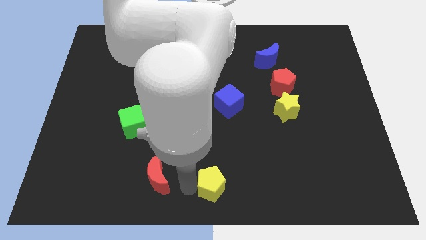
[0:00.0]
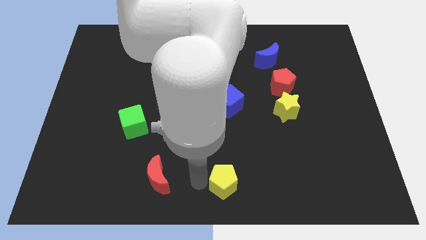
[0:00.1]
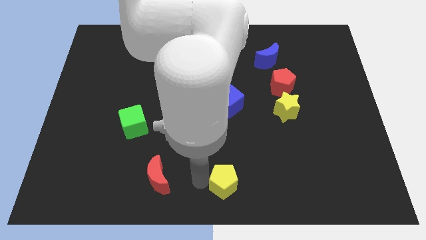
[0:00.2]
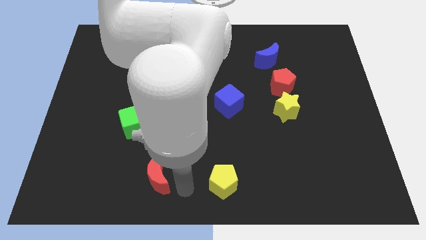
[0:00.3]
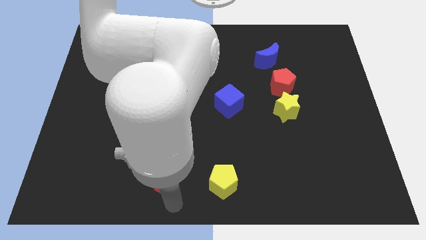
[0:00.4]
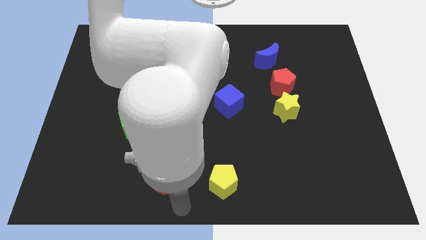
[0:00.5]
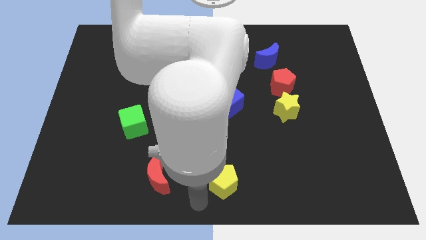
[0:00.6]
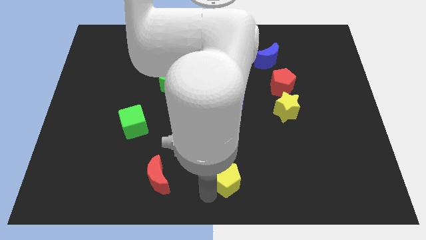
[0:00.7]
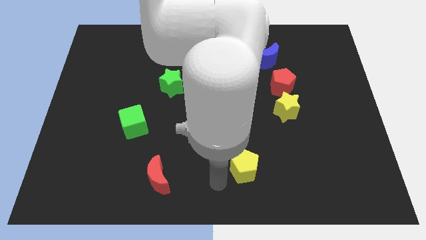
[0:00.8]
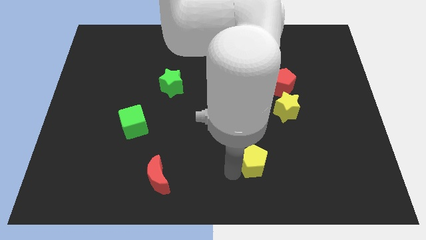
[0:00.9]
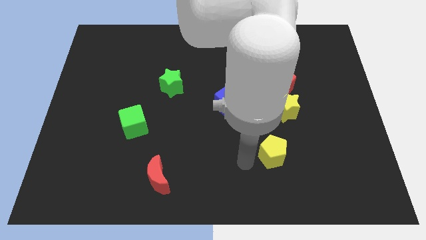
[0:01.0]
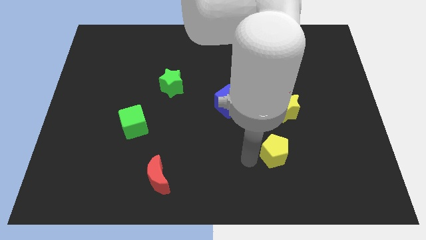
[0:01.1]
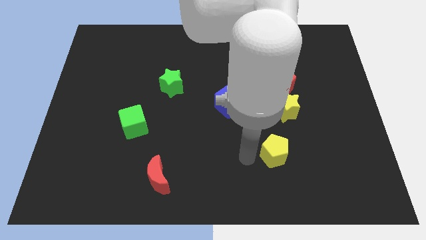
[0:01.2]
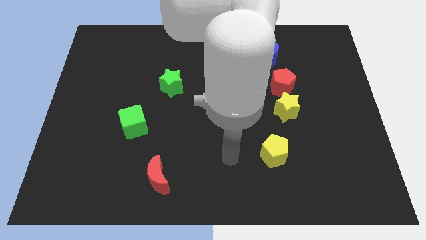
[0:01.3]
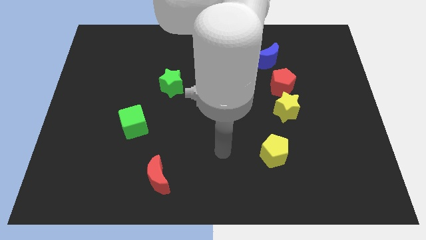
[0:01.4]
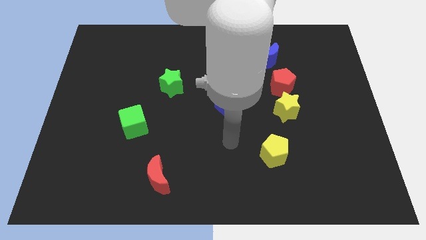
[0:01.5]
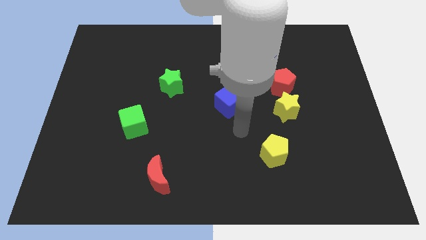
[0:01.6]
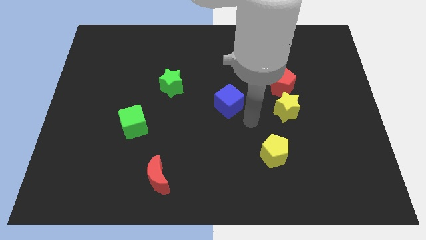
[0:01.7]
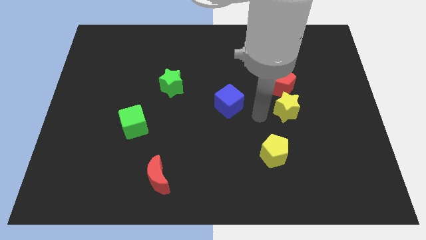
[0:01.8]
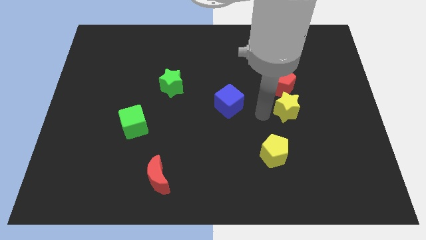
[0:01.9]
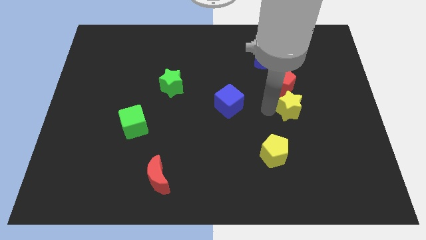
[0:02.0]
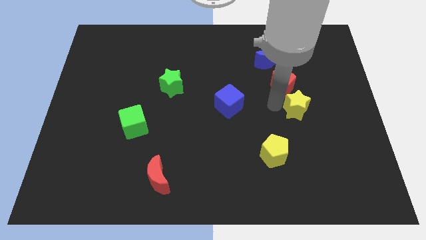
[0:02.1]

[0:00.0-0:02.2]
move the yellow pentagon to the bottom of the yellow star

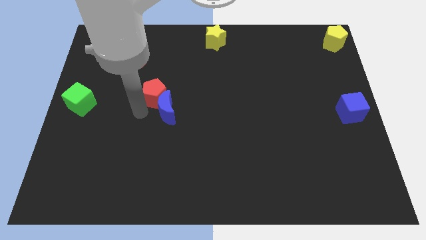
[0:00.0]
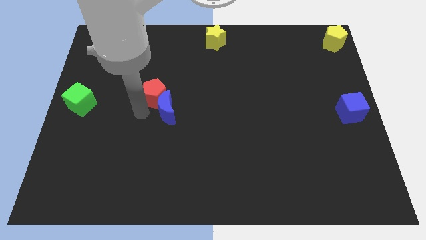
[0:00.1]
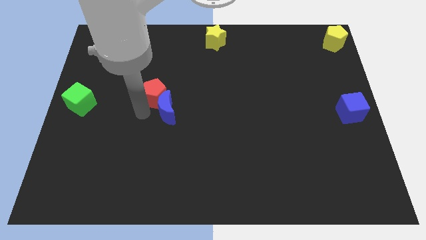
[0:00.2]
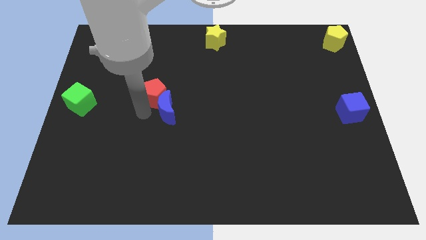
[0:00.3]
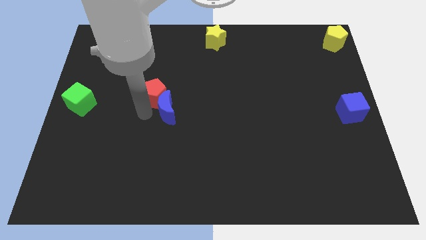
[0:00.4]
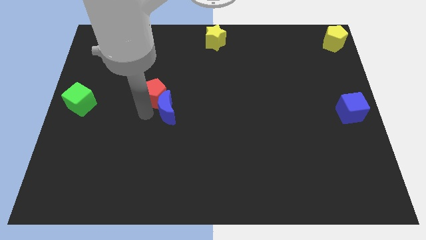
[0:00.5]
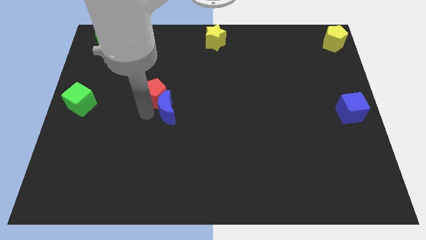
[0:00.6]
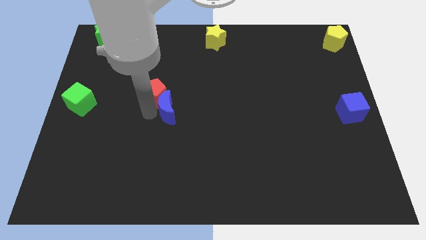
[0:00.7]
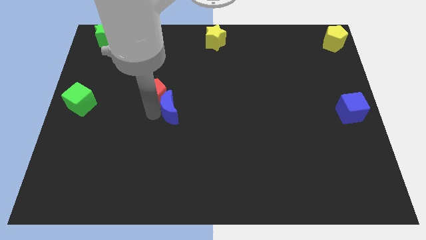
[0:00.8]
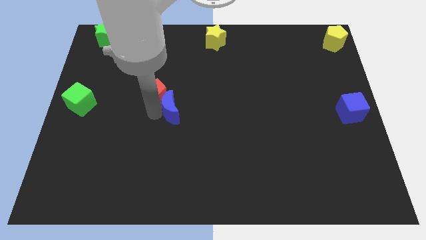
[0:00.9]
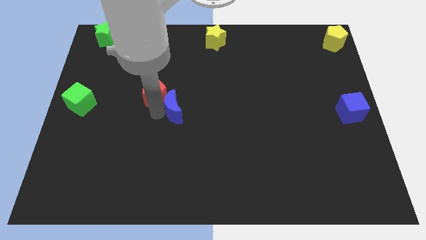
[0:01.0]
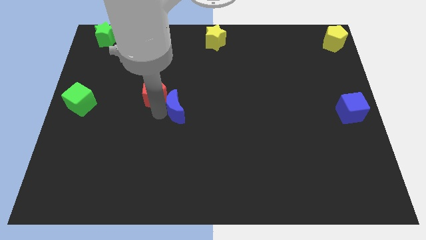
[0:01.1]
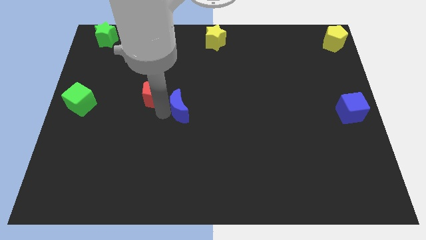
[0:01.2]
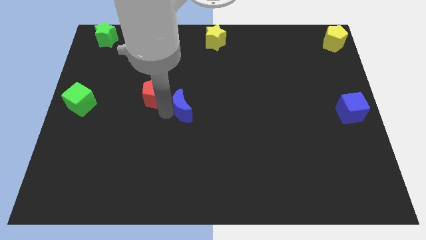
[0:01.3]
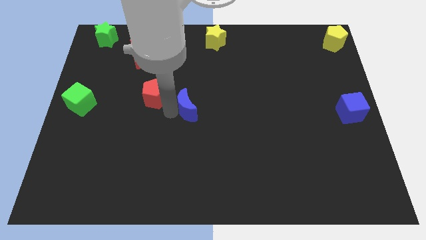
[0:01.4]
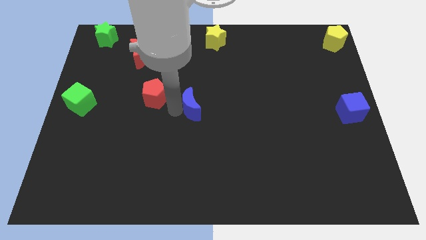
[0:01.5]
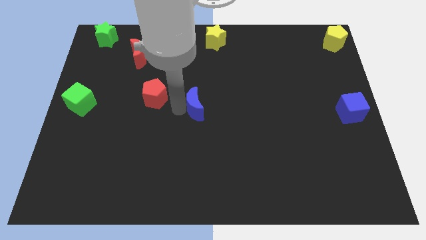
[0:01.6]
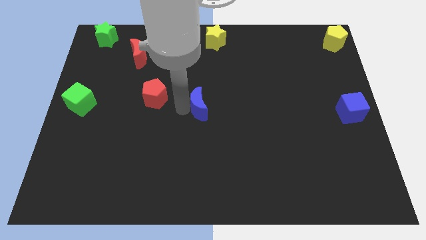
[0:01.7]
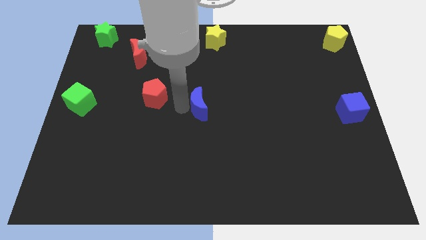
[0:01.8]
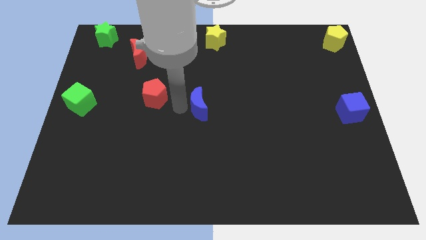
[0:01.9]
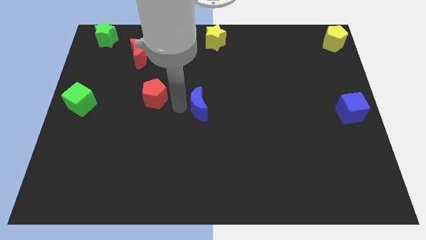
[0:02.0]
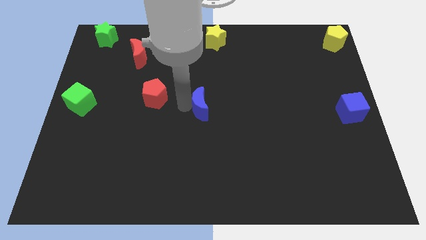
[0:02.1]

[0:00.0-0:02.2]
seperate red pentagon and blue moon

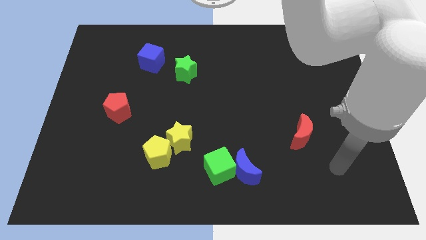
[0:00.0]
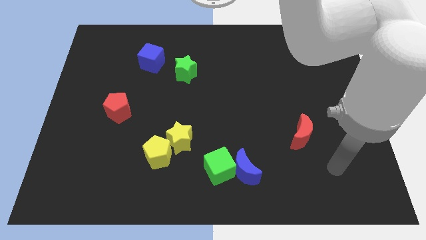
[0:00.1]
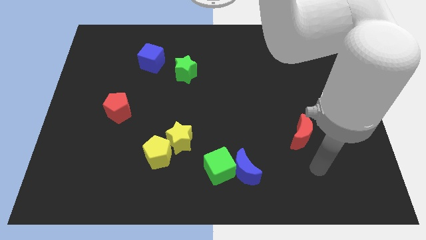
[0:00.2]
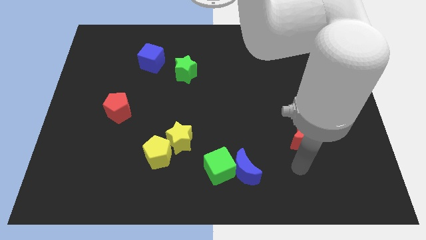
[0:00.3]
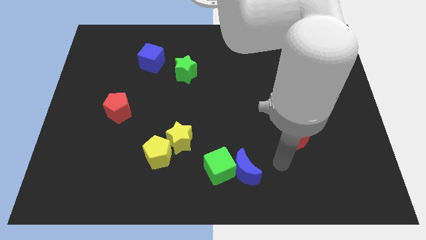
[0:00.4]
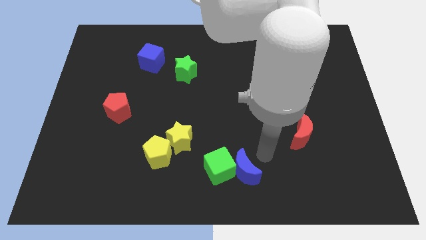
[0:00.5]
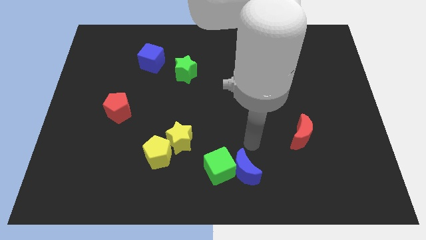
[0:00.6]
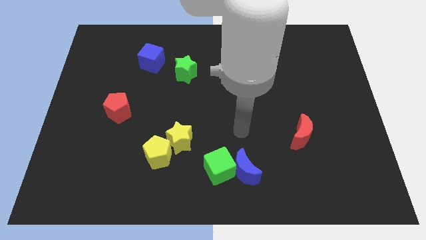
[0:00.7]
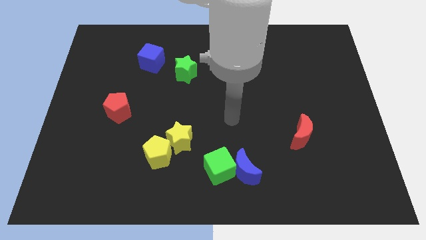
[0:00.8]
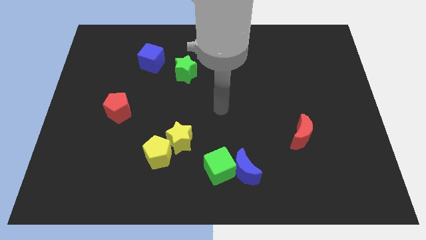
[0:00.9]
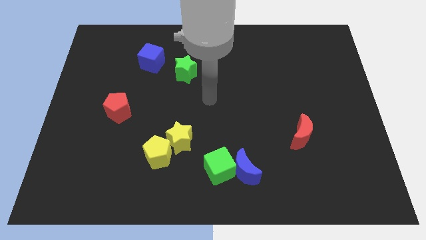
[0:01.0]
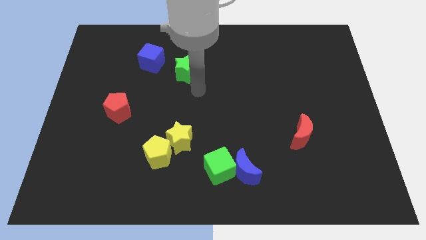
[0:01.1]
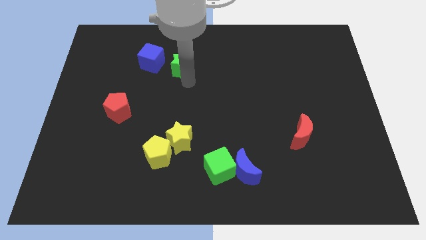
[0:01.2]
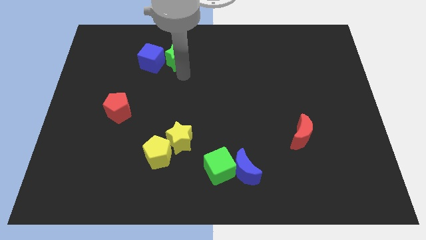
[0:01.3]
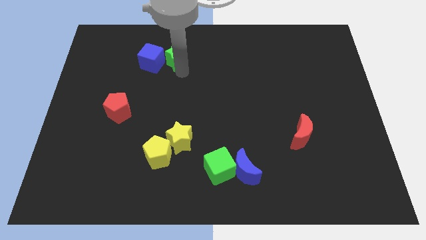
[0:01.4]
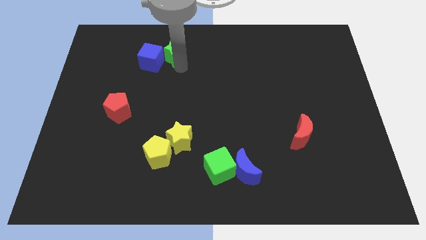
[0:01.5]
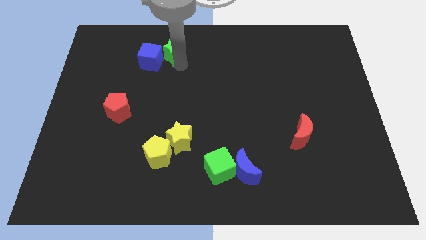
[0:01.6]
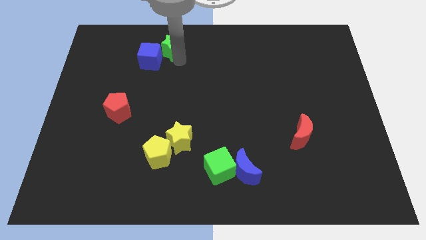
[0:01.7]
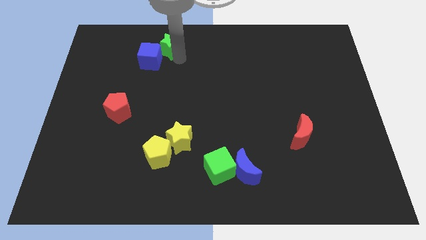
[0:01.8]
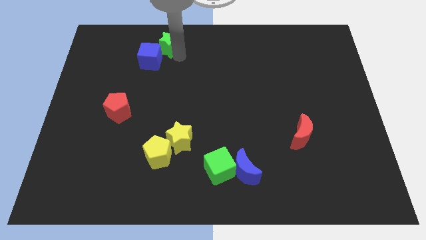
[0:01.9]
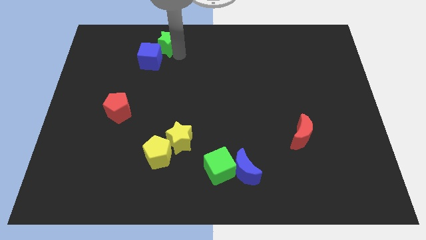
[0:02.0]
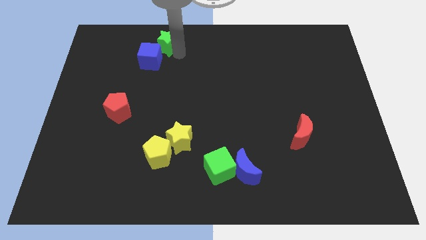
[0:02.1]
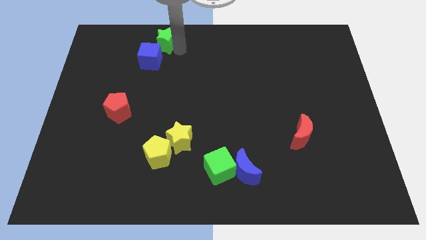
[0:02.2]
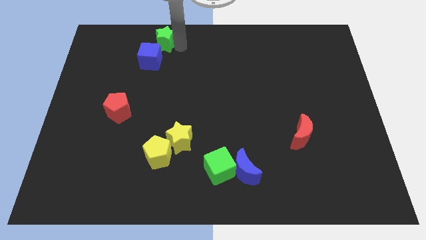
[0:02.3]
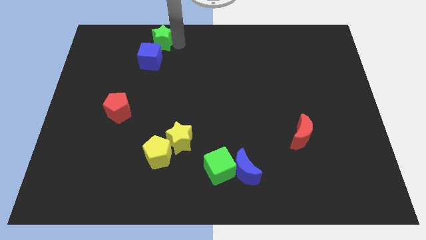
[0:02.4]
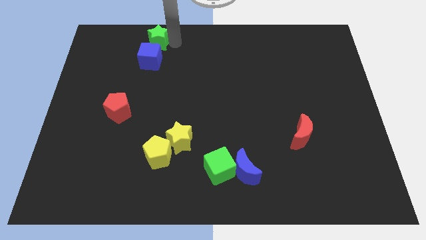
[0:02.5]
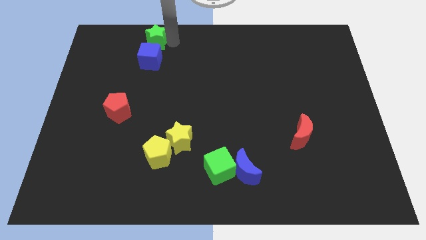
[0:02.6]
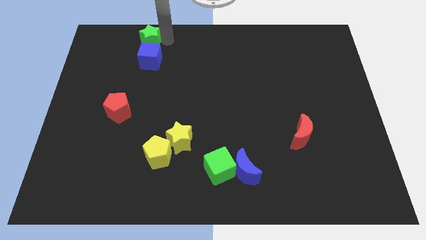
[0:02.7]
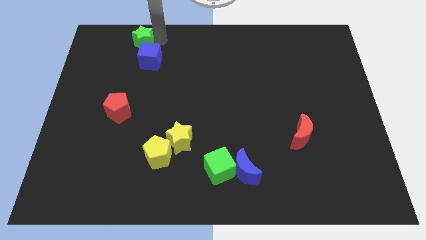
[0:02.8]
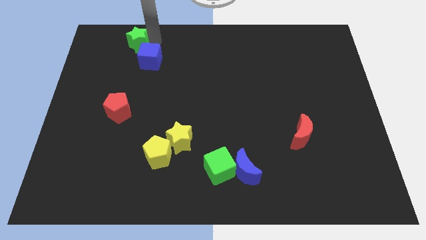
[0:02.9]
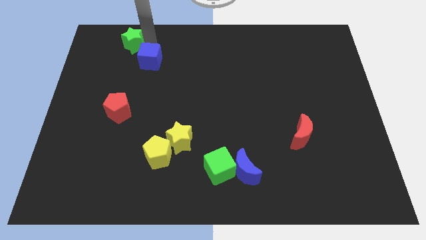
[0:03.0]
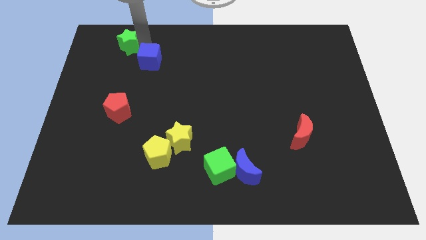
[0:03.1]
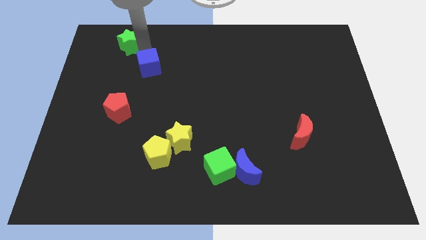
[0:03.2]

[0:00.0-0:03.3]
push the green star to the top left of the blue cube

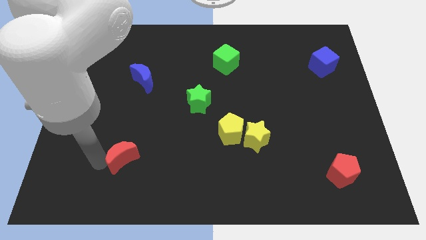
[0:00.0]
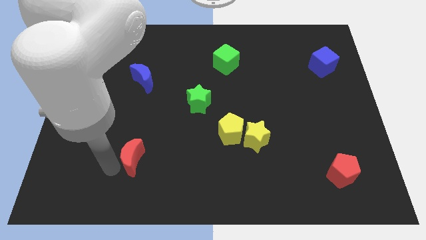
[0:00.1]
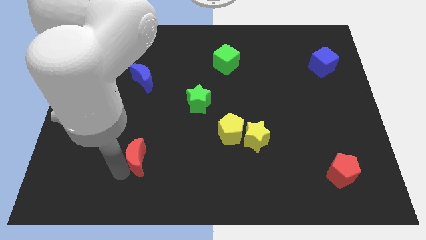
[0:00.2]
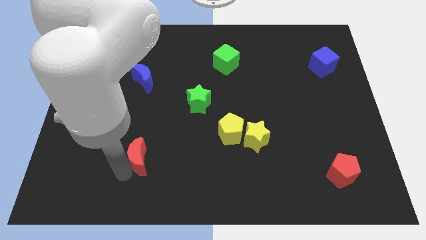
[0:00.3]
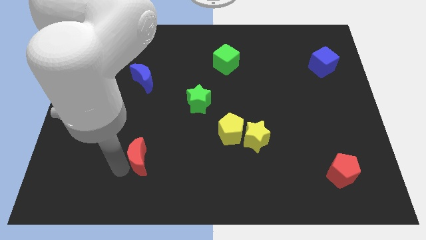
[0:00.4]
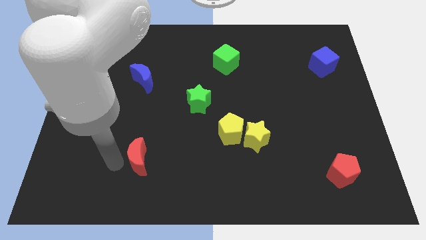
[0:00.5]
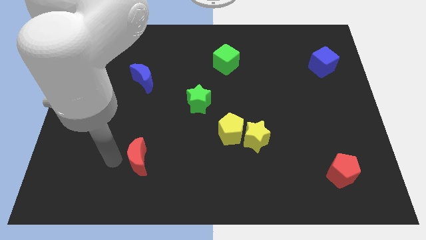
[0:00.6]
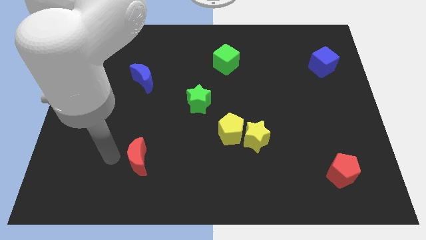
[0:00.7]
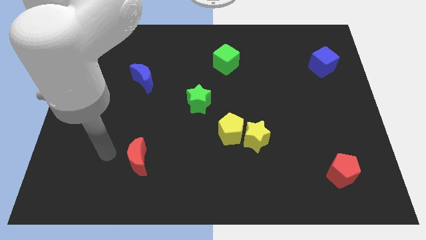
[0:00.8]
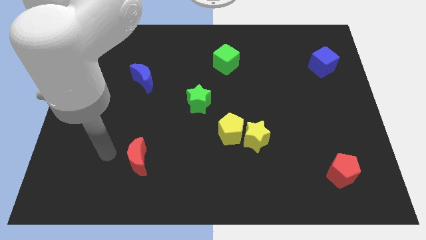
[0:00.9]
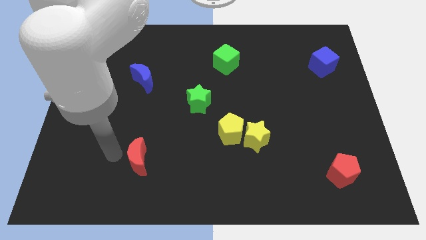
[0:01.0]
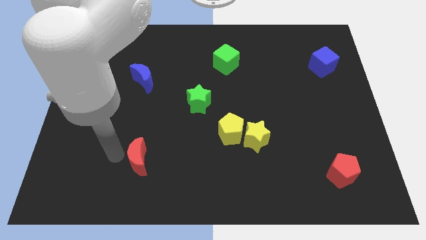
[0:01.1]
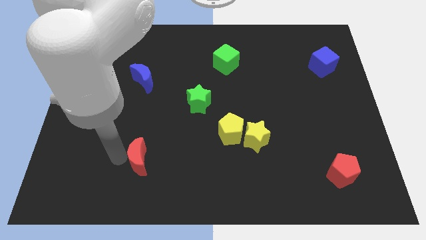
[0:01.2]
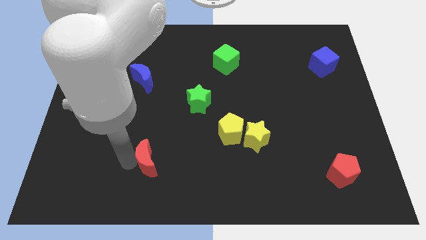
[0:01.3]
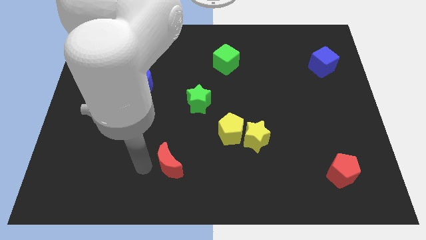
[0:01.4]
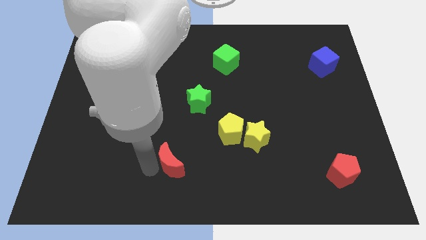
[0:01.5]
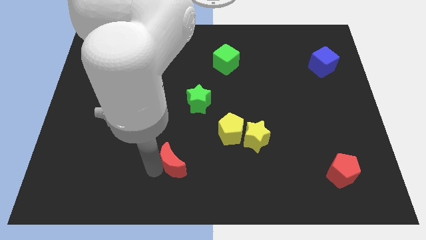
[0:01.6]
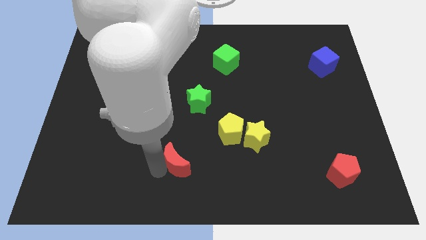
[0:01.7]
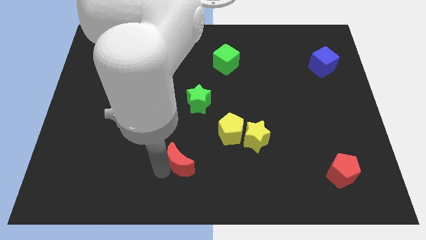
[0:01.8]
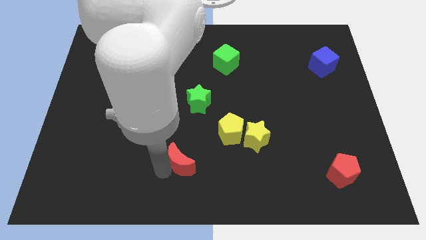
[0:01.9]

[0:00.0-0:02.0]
push the red moon towards the right
